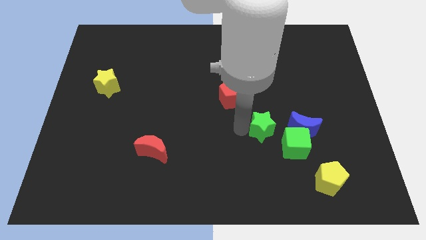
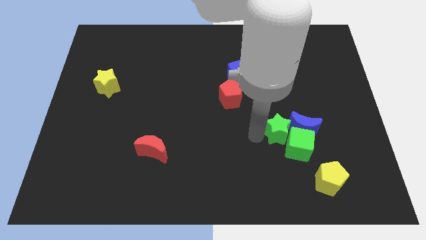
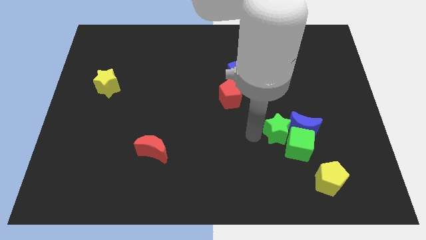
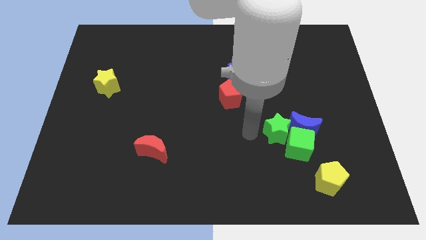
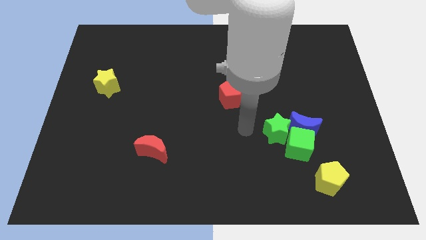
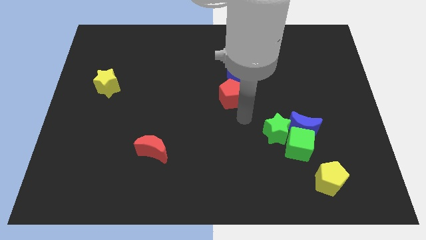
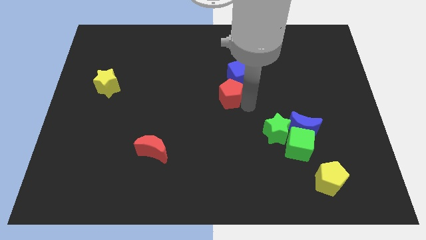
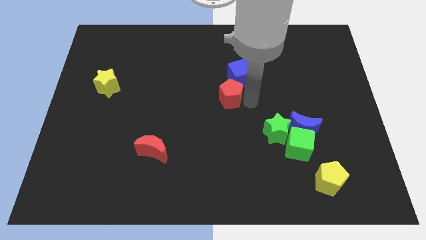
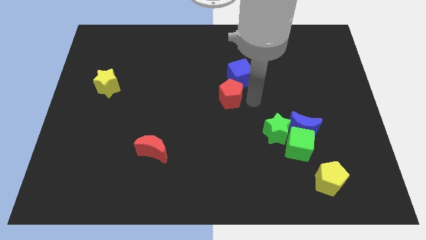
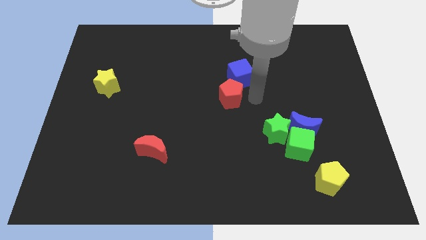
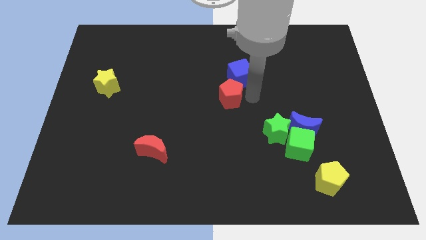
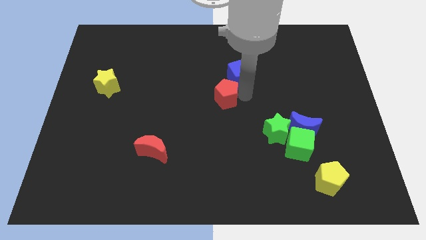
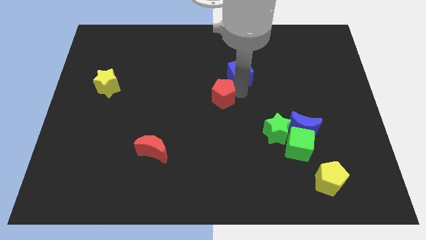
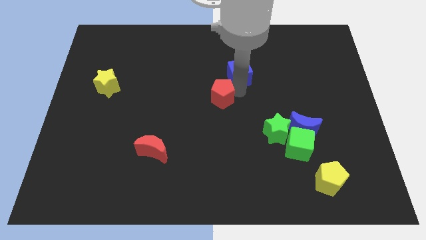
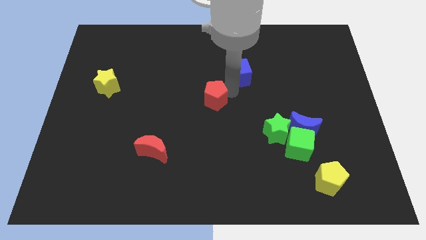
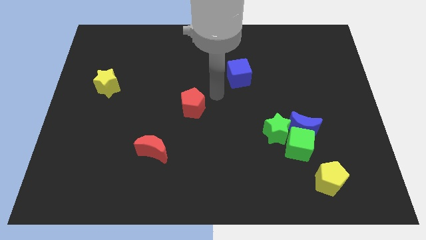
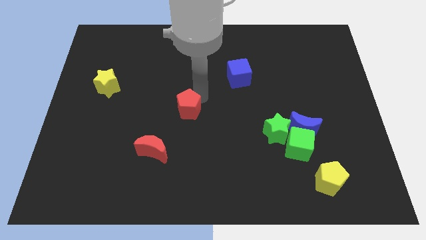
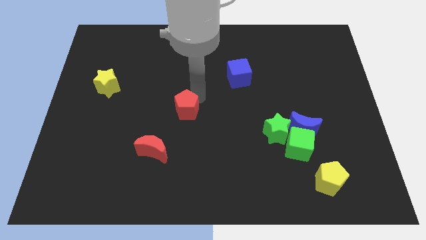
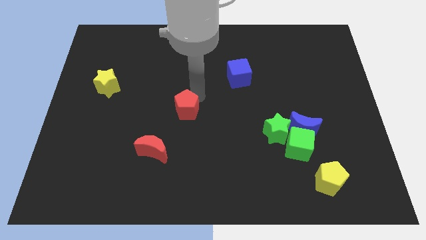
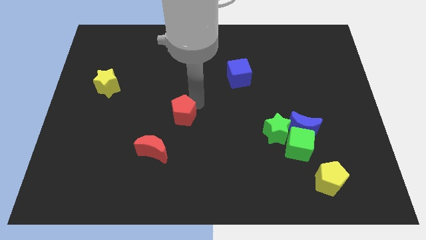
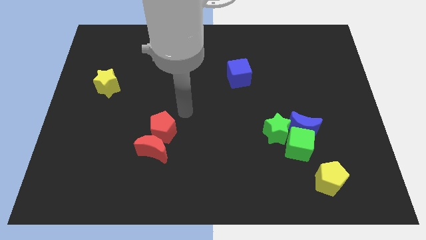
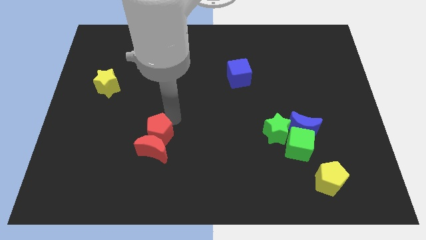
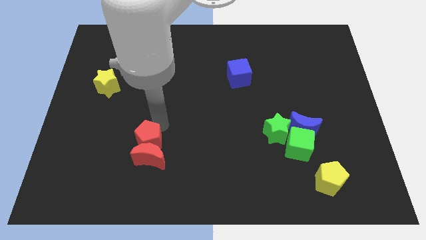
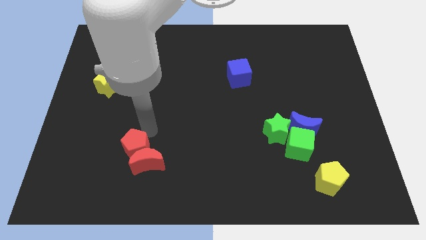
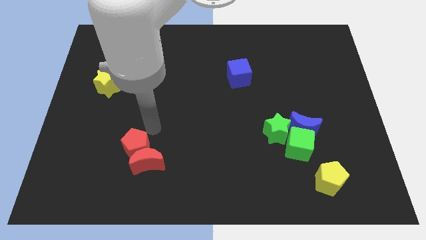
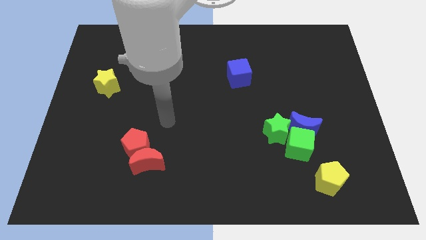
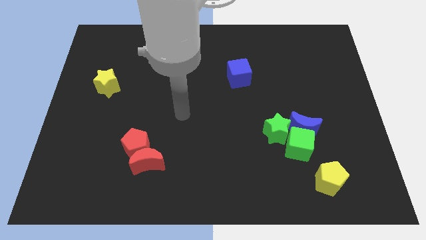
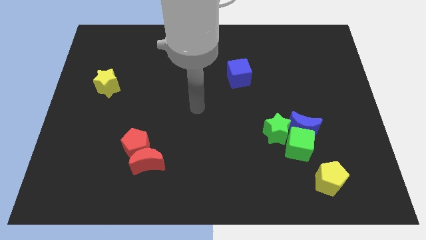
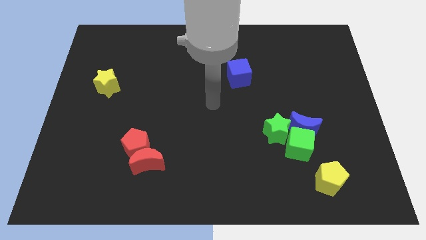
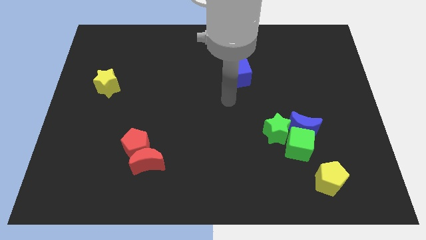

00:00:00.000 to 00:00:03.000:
move the red pentagon into the red moon

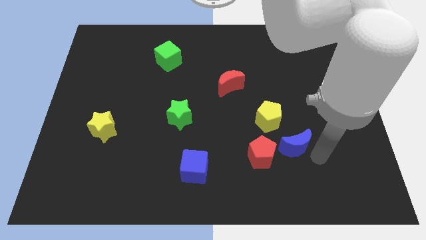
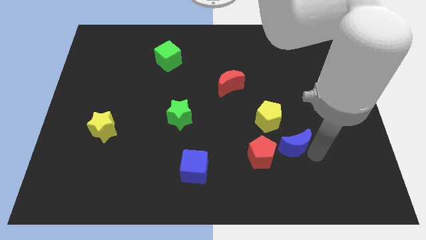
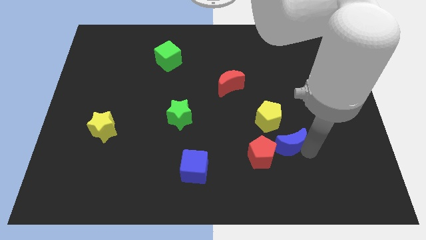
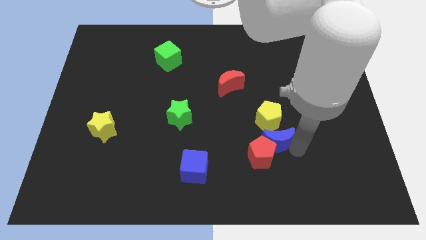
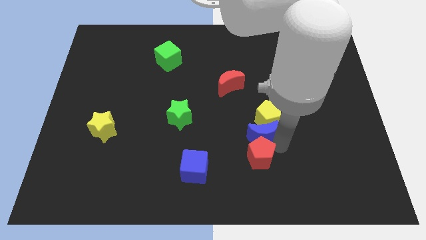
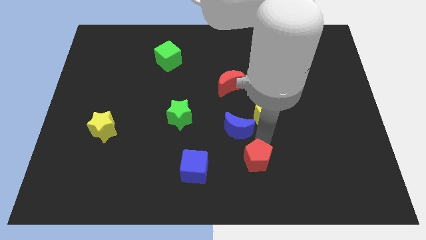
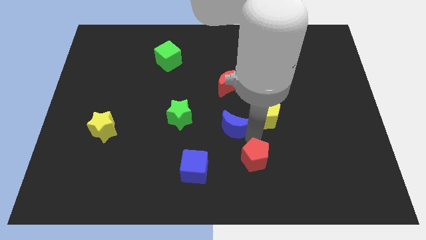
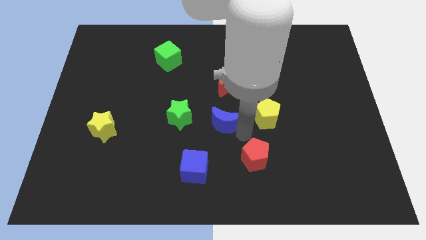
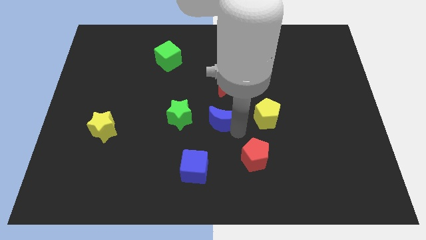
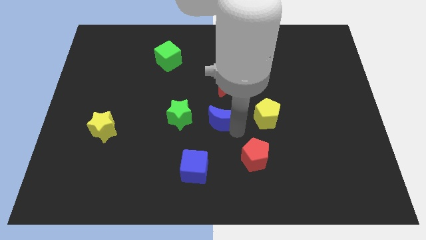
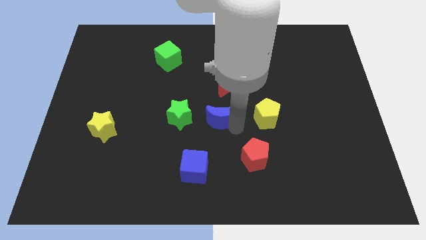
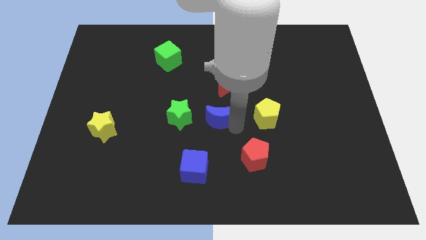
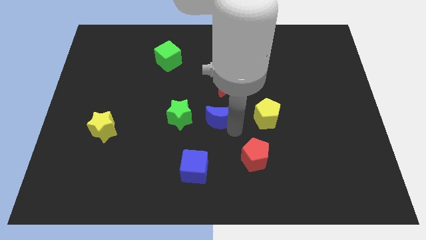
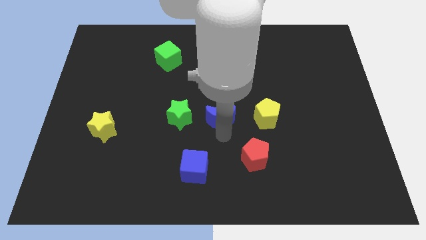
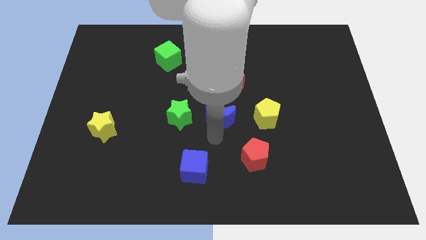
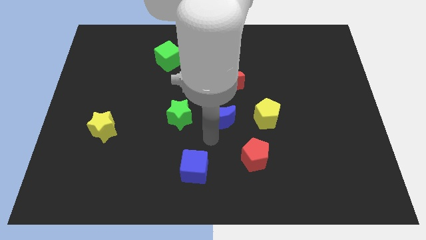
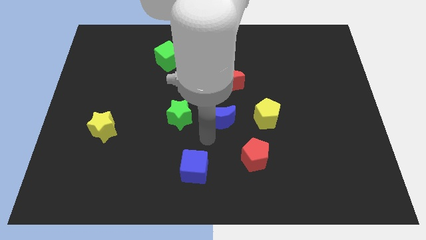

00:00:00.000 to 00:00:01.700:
push the blue crescente towards the center of the board

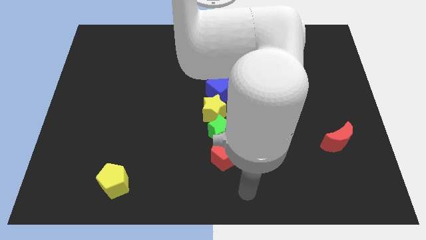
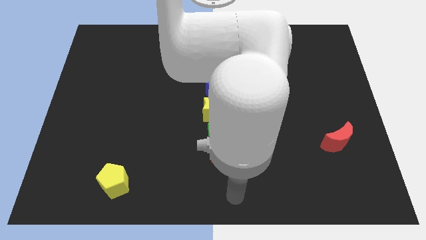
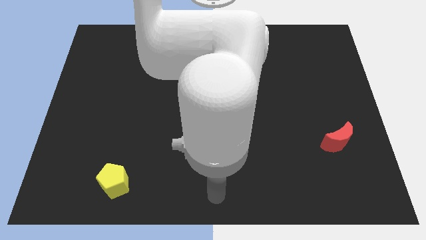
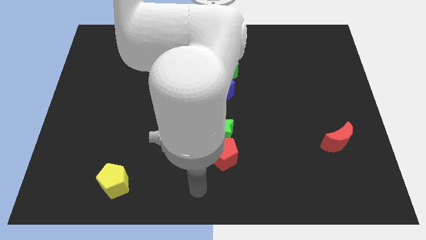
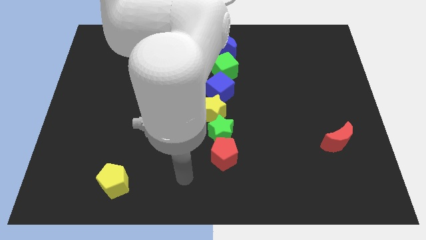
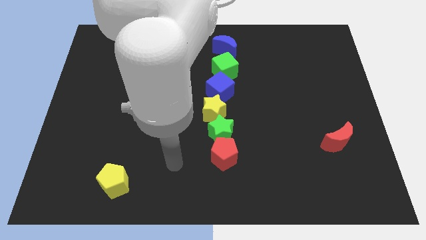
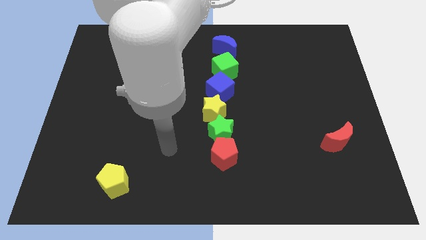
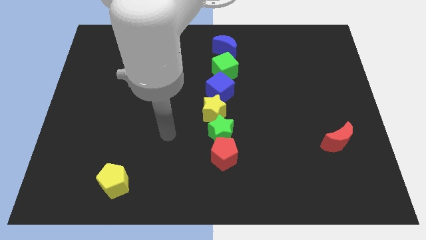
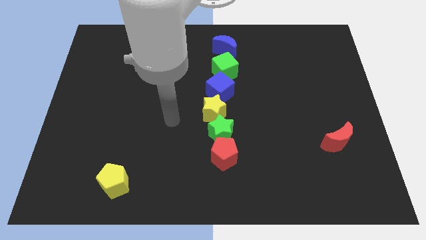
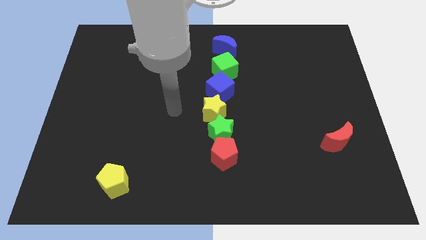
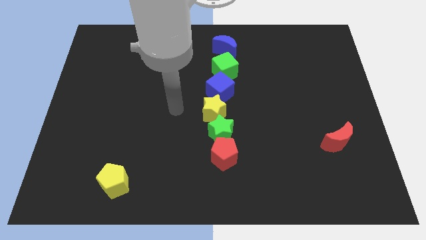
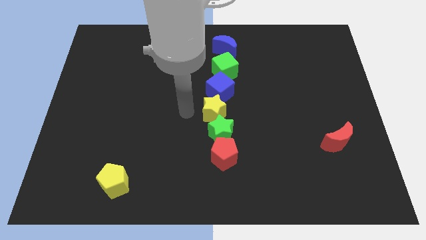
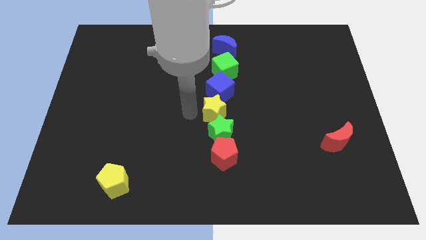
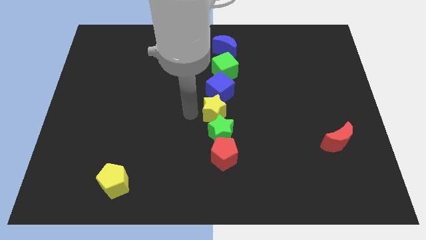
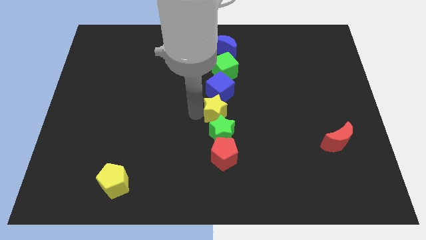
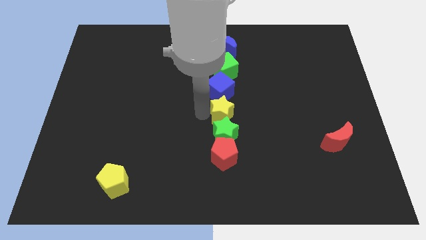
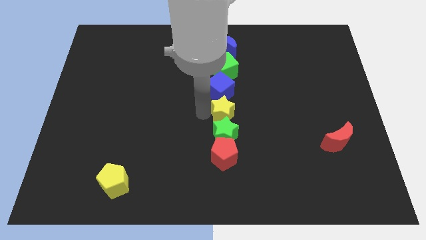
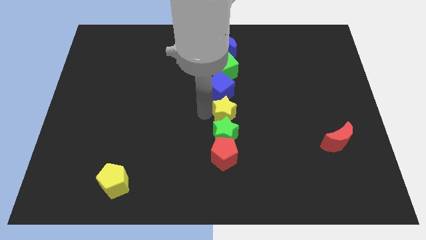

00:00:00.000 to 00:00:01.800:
adjust the yellow star at the center of the table

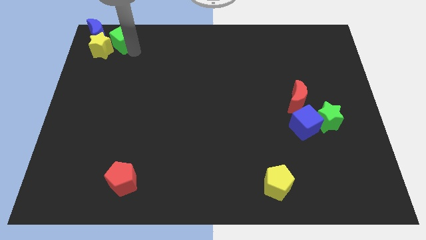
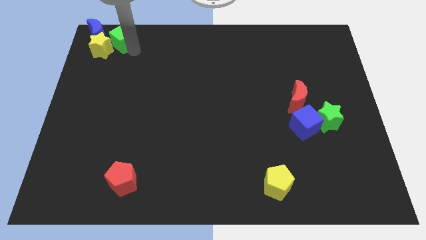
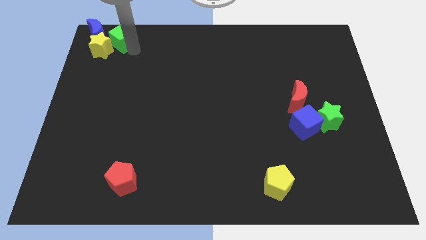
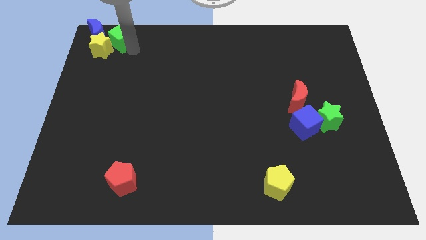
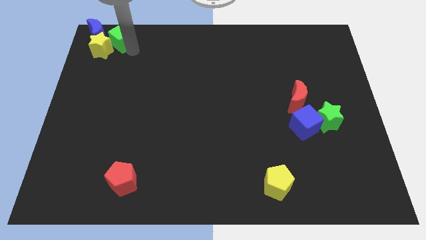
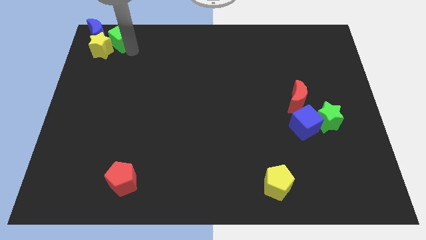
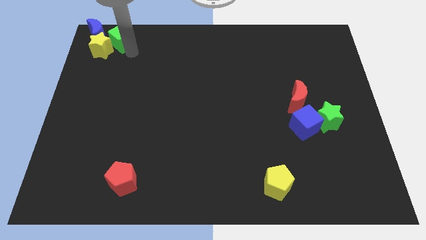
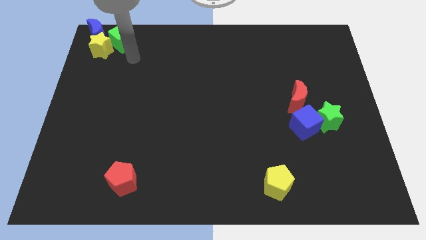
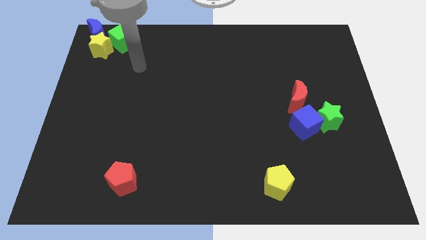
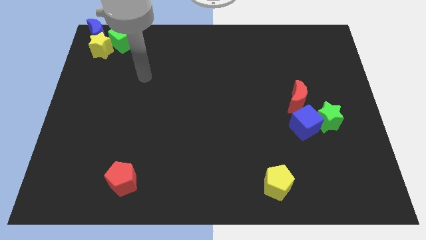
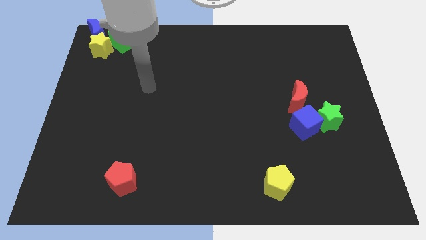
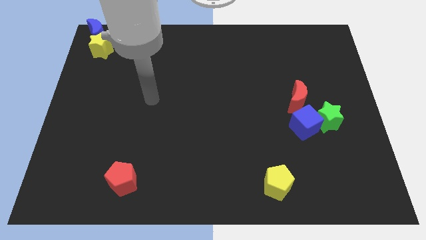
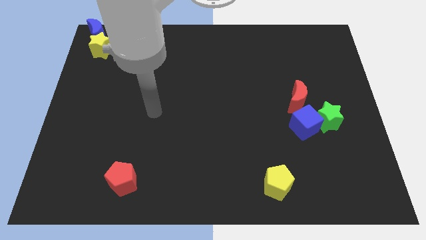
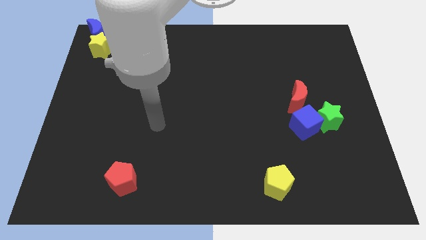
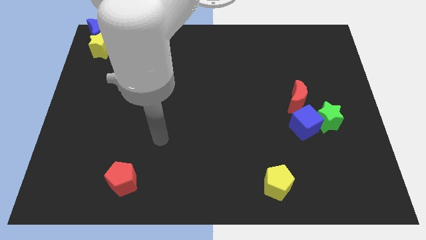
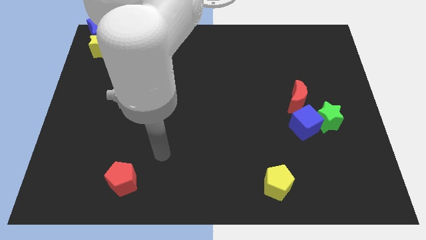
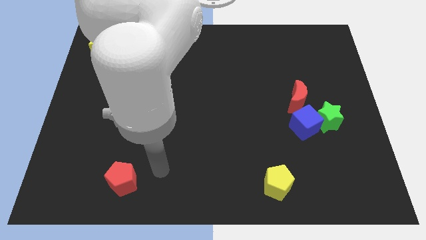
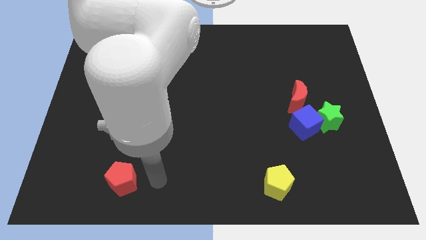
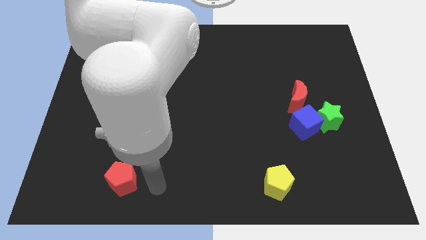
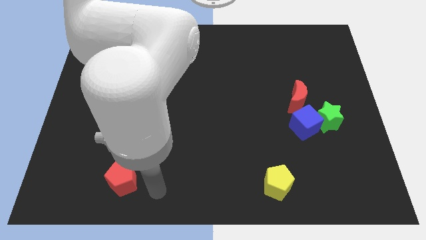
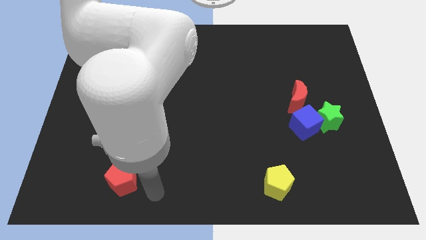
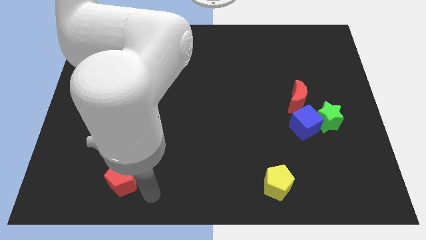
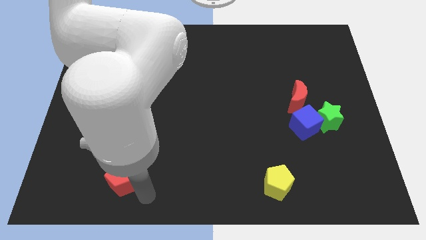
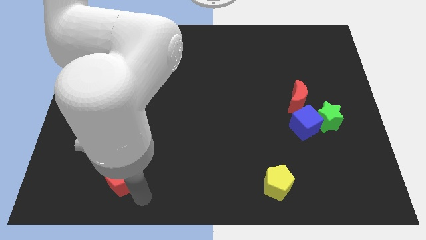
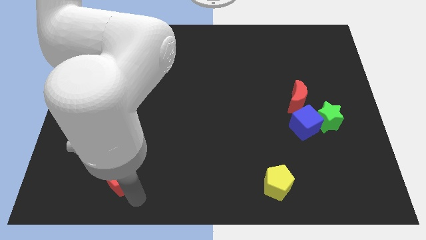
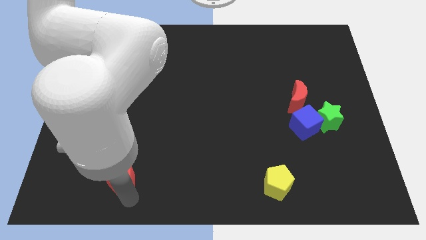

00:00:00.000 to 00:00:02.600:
move the arm bottom right to the red pentagon
